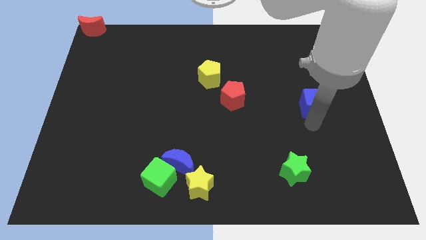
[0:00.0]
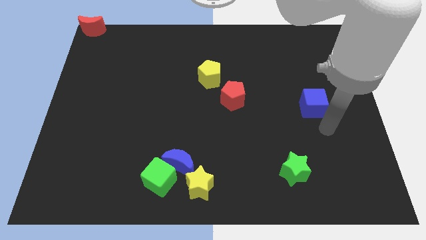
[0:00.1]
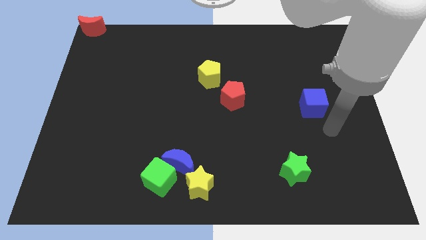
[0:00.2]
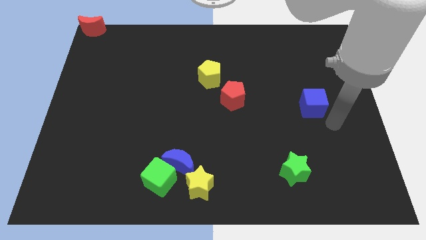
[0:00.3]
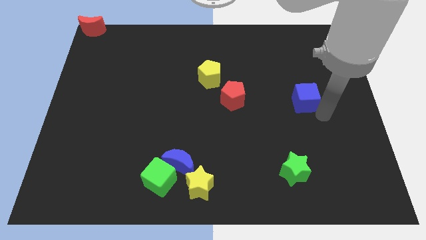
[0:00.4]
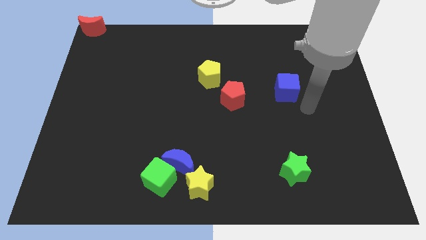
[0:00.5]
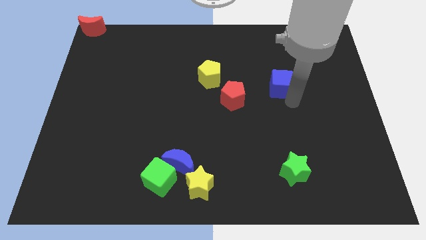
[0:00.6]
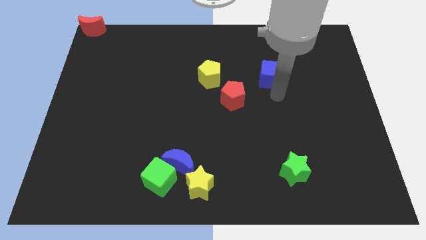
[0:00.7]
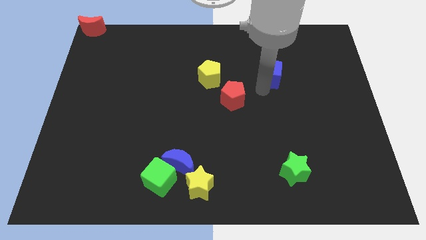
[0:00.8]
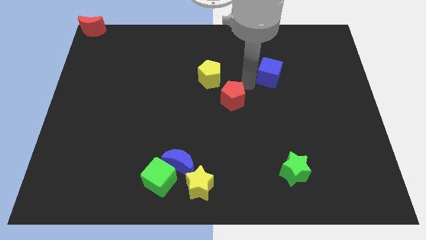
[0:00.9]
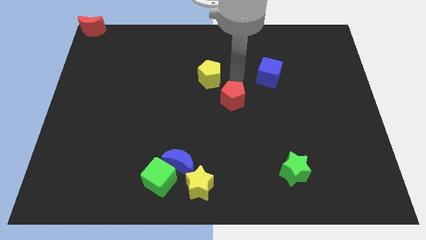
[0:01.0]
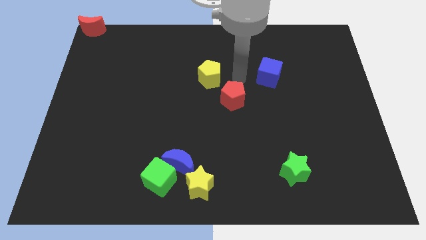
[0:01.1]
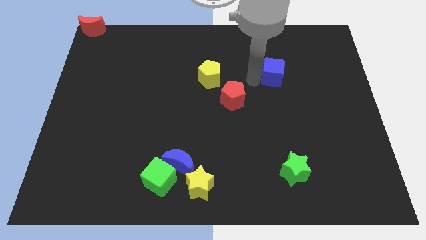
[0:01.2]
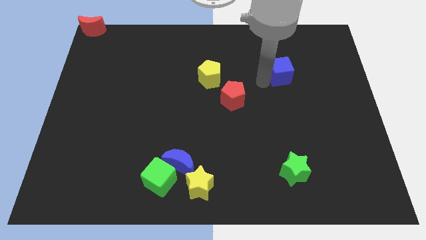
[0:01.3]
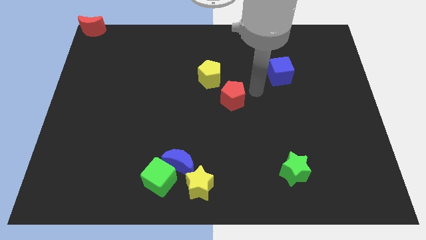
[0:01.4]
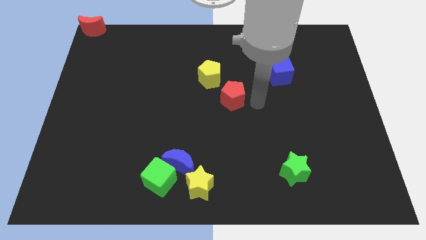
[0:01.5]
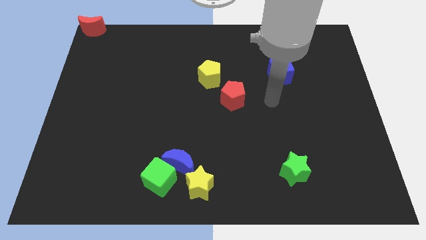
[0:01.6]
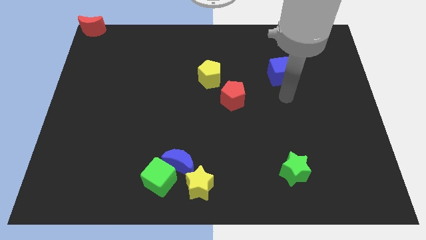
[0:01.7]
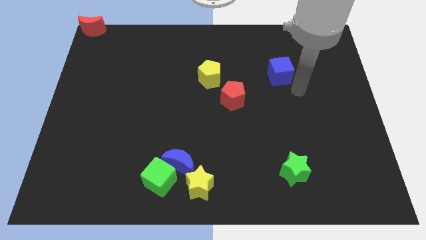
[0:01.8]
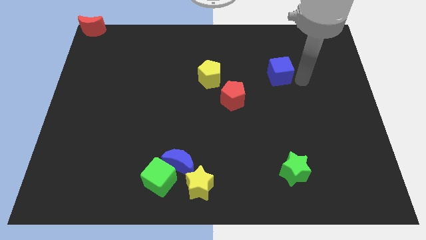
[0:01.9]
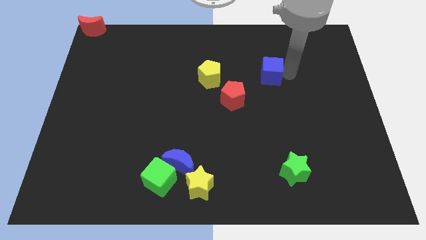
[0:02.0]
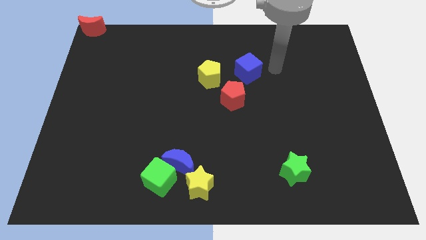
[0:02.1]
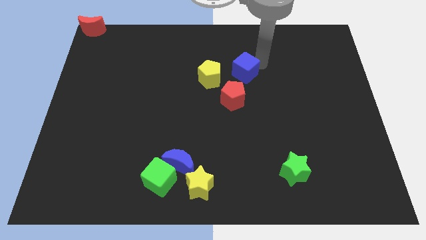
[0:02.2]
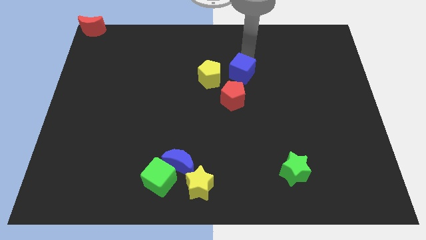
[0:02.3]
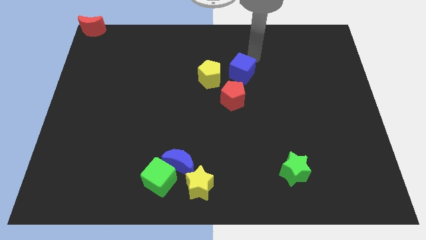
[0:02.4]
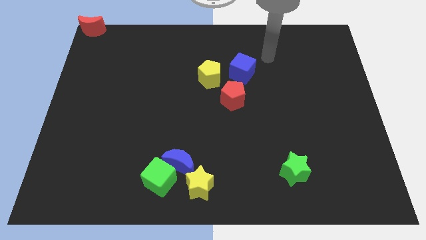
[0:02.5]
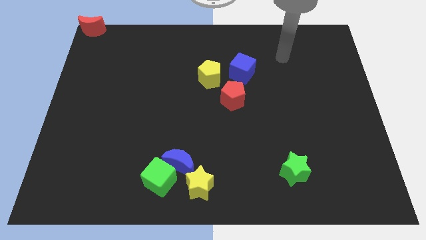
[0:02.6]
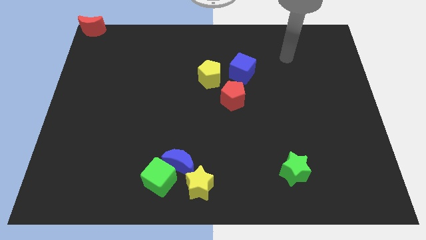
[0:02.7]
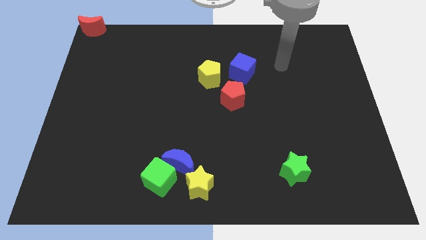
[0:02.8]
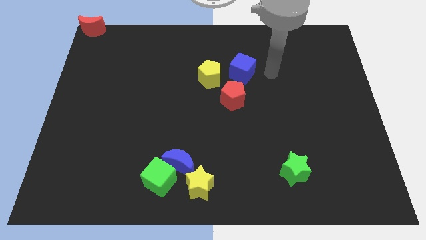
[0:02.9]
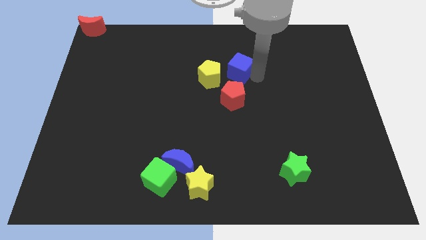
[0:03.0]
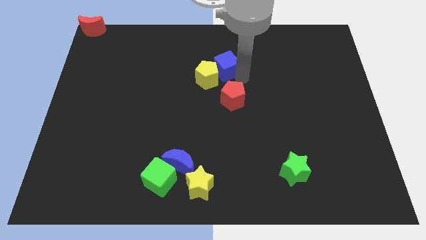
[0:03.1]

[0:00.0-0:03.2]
push the blue cube to the top side of the red pentagon

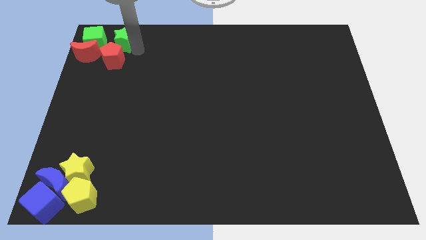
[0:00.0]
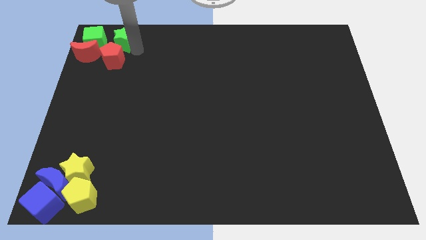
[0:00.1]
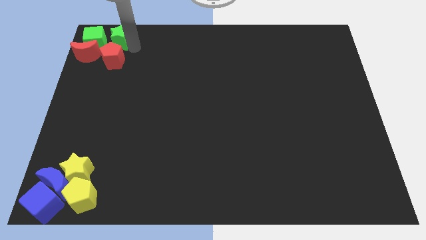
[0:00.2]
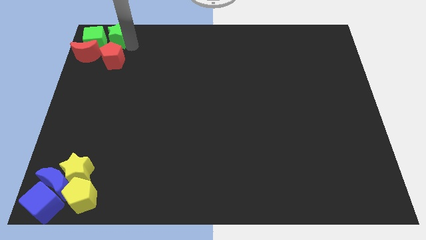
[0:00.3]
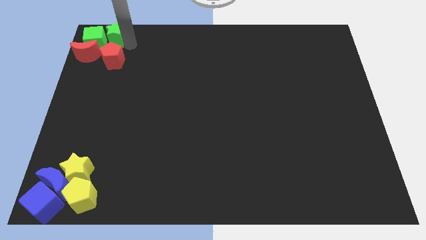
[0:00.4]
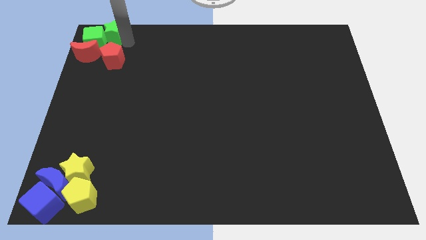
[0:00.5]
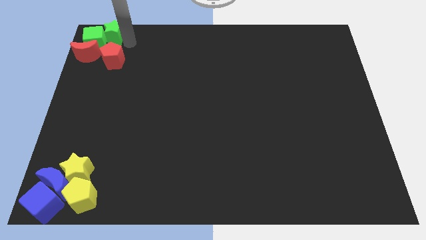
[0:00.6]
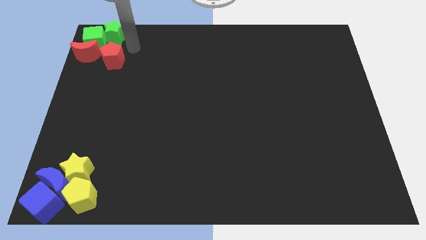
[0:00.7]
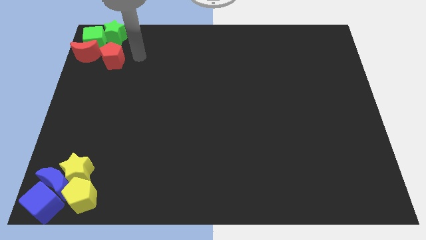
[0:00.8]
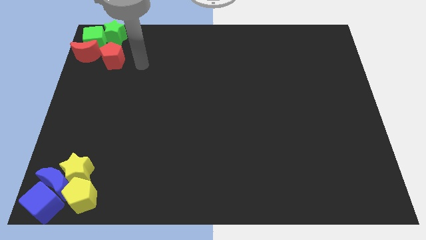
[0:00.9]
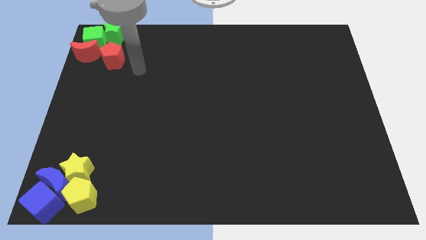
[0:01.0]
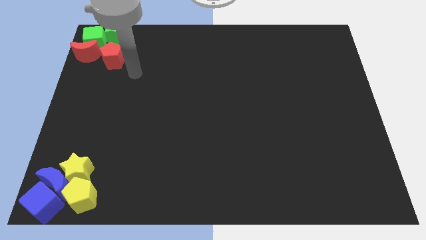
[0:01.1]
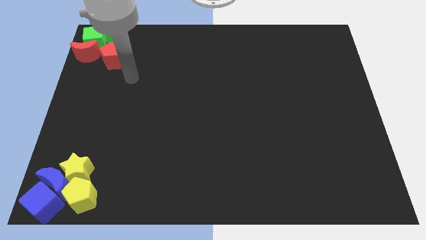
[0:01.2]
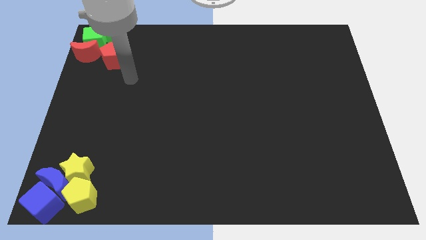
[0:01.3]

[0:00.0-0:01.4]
place the green star right to the green cube

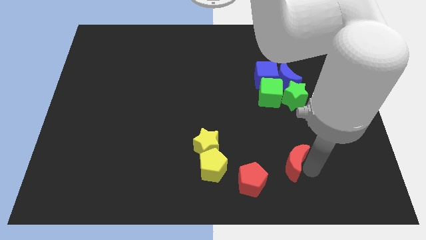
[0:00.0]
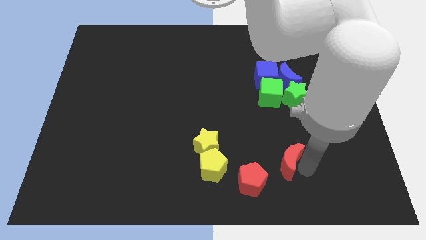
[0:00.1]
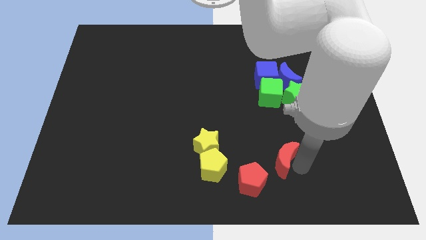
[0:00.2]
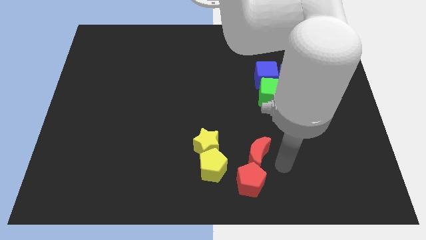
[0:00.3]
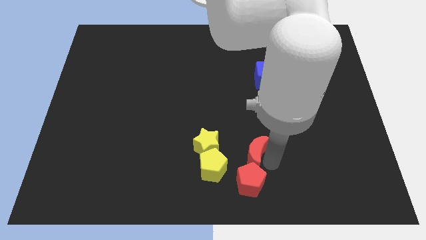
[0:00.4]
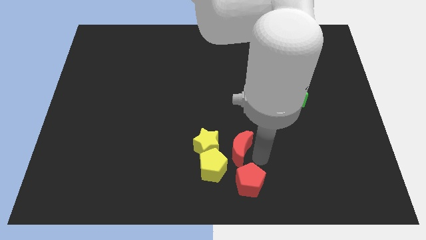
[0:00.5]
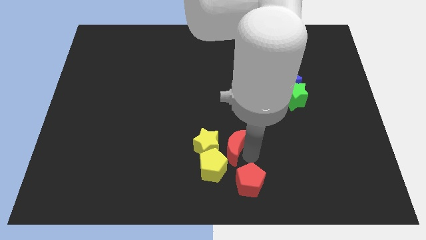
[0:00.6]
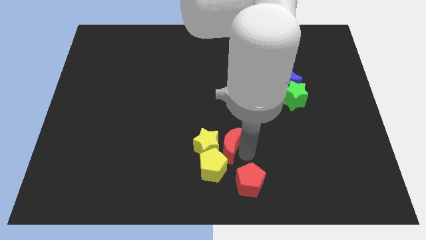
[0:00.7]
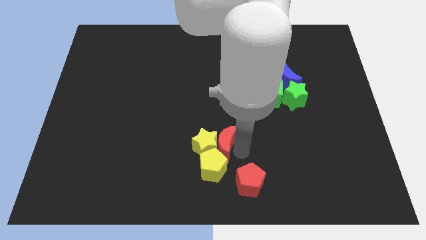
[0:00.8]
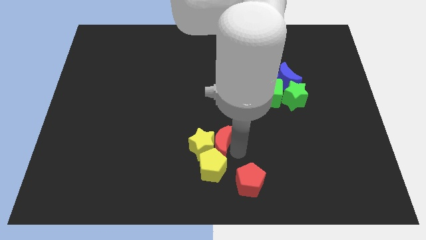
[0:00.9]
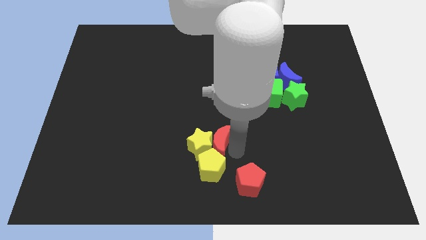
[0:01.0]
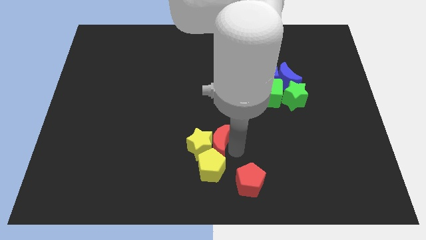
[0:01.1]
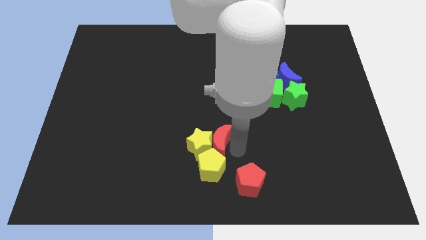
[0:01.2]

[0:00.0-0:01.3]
push red crescent above yellow pentagon

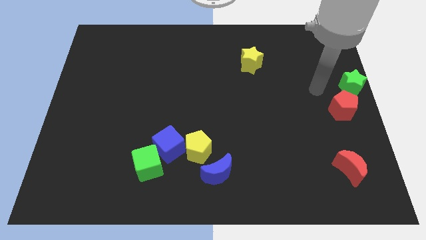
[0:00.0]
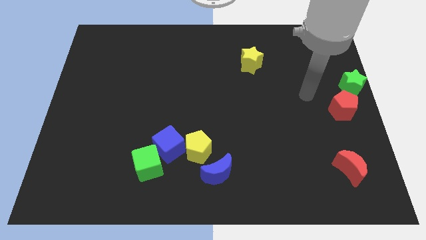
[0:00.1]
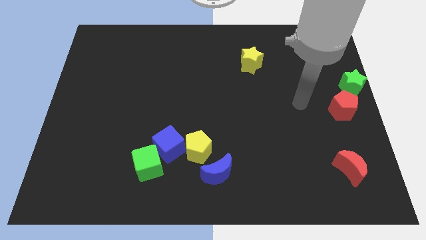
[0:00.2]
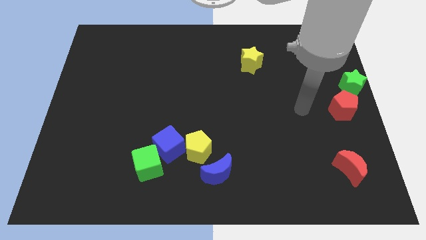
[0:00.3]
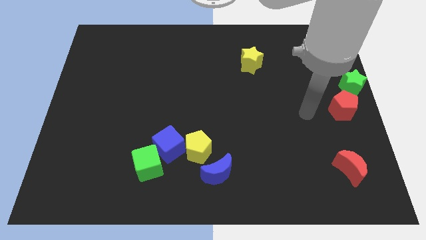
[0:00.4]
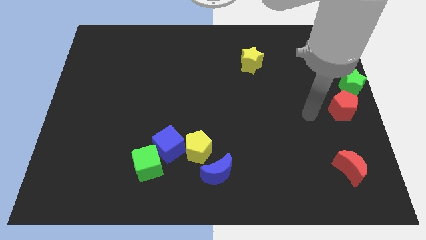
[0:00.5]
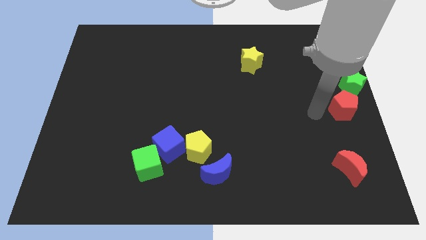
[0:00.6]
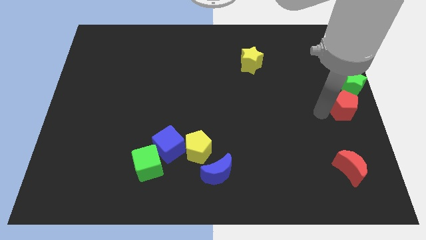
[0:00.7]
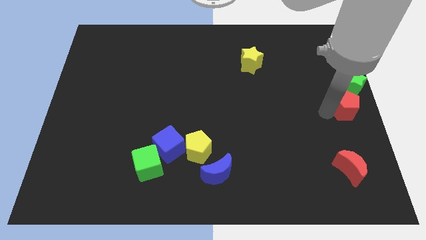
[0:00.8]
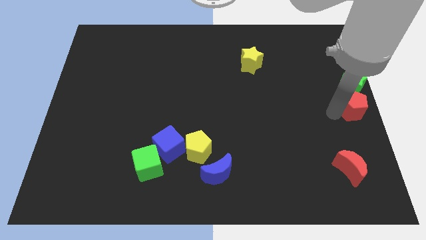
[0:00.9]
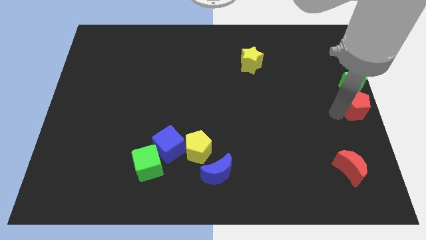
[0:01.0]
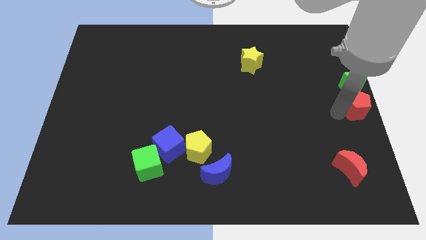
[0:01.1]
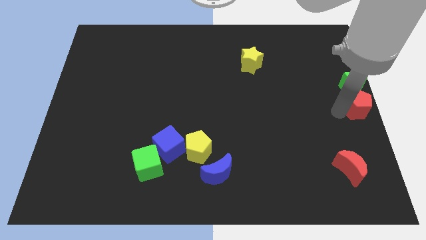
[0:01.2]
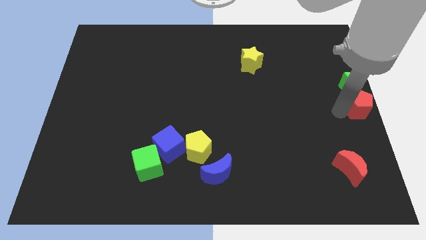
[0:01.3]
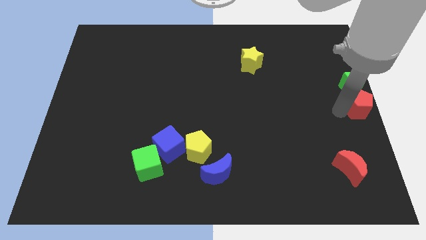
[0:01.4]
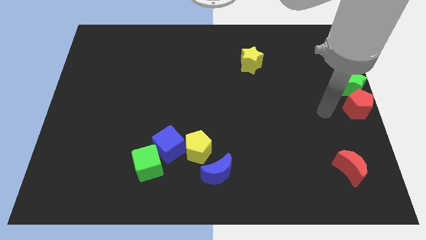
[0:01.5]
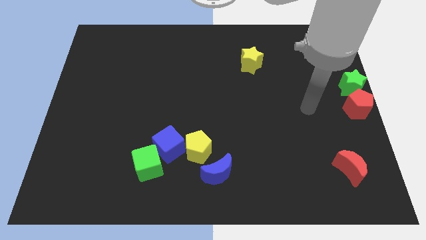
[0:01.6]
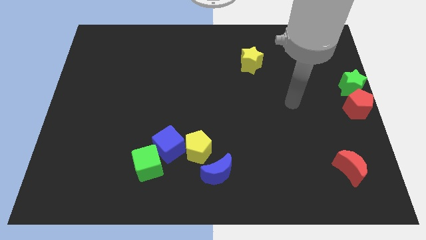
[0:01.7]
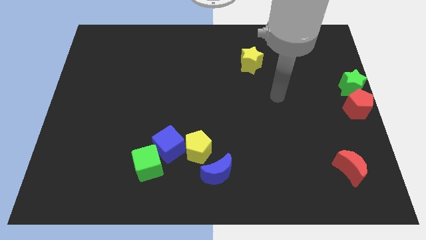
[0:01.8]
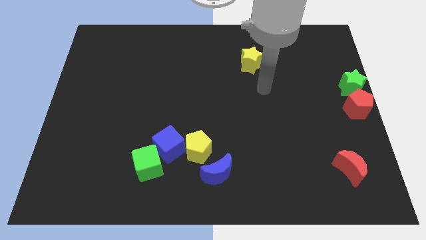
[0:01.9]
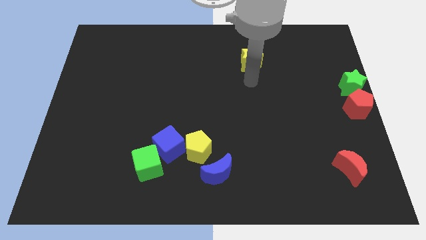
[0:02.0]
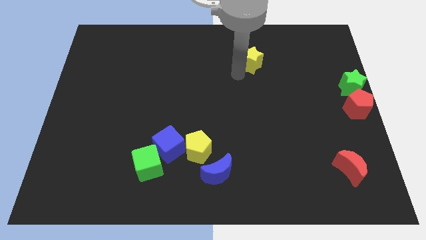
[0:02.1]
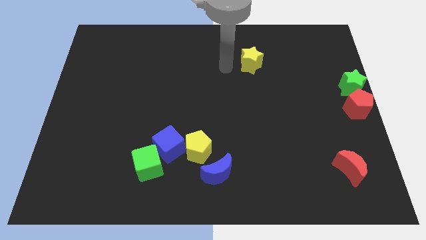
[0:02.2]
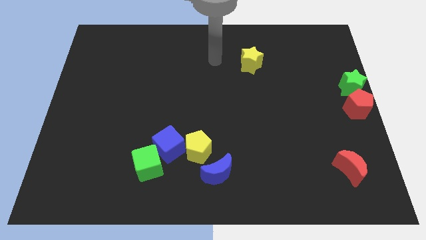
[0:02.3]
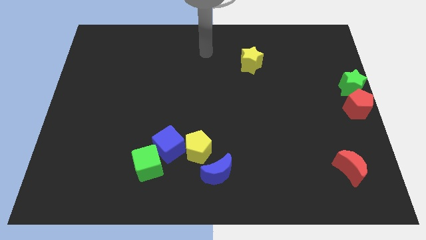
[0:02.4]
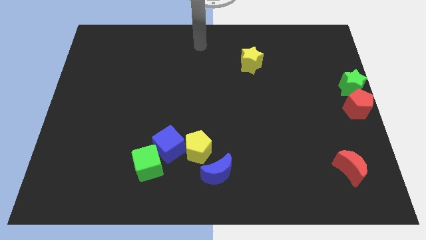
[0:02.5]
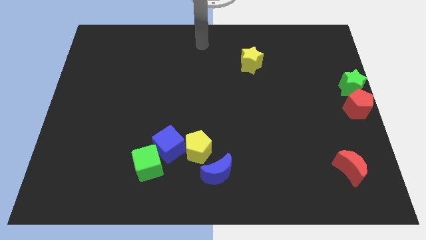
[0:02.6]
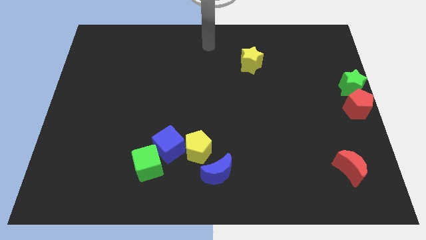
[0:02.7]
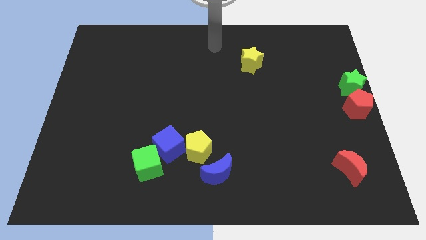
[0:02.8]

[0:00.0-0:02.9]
place the red pentagon below the green star

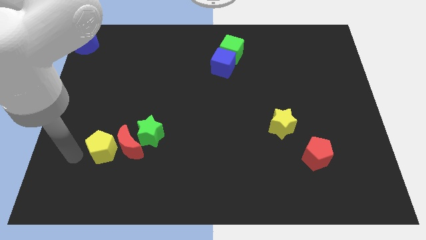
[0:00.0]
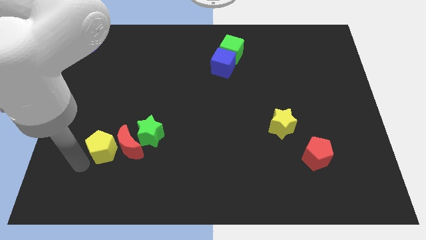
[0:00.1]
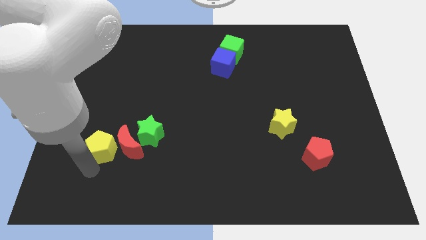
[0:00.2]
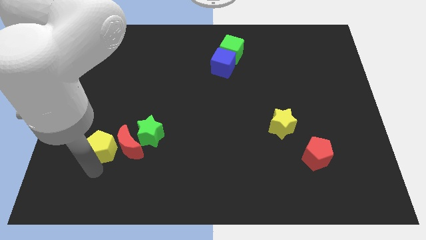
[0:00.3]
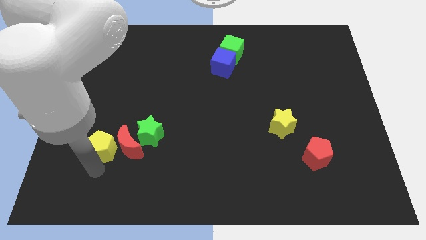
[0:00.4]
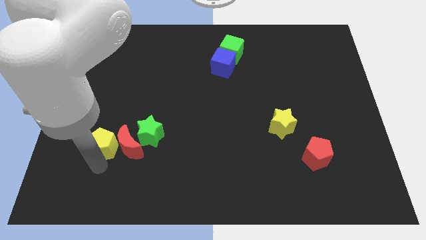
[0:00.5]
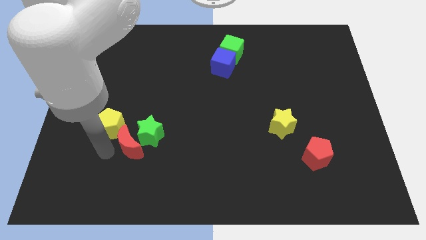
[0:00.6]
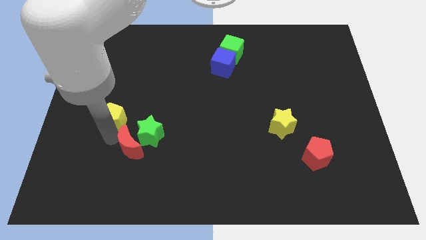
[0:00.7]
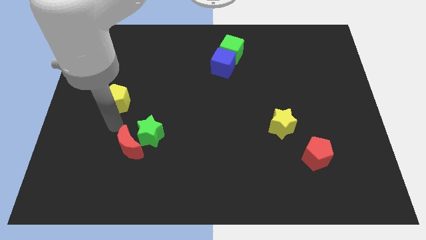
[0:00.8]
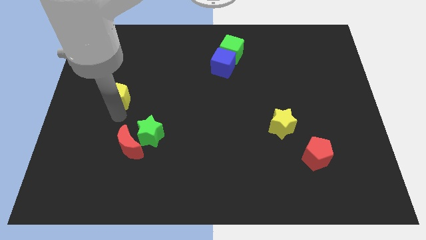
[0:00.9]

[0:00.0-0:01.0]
move the yellow pentagon away from the red crescent
